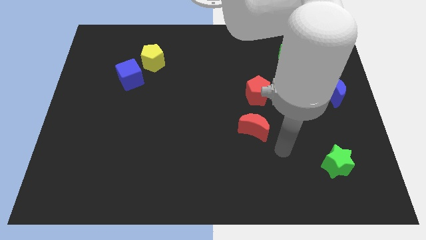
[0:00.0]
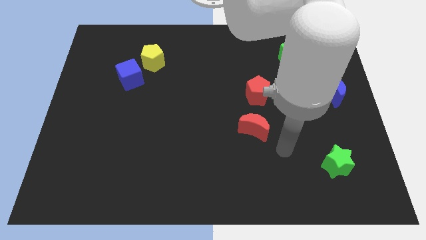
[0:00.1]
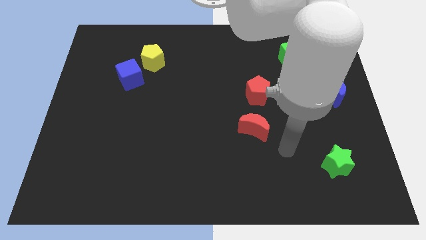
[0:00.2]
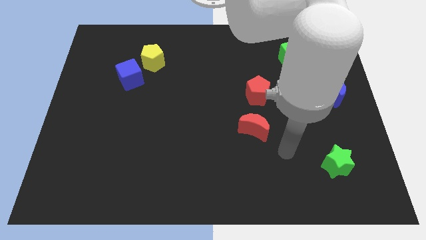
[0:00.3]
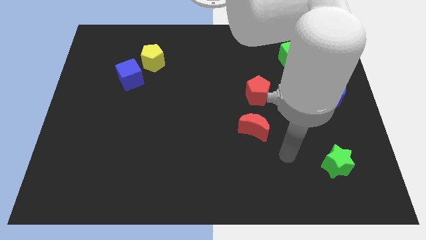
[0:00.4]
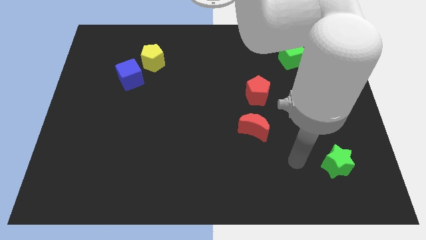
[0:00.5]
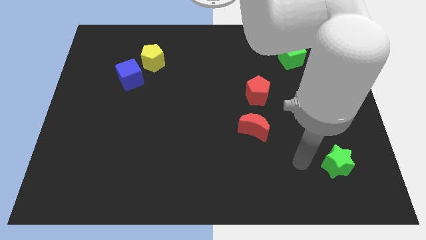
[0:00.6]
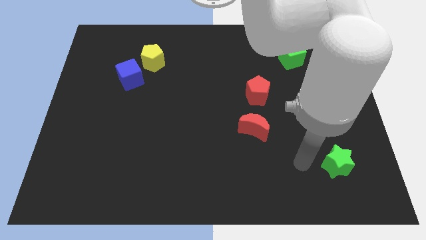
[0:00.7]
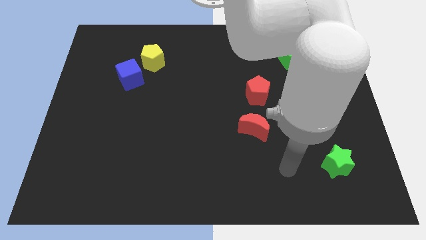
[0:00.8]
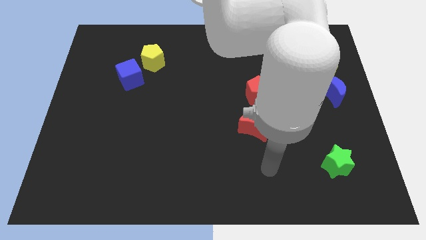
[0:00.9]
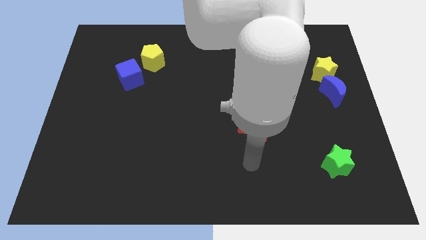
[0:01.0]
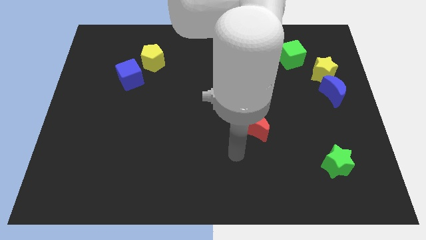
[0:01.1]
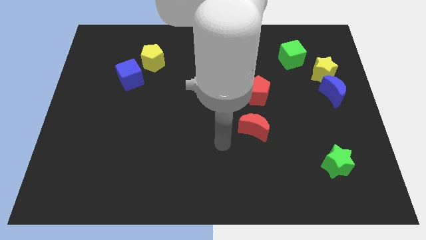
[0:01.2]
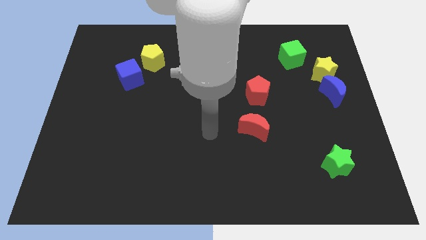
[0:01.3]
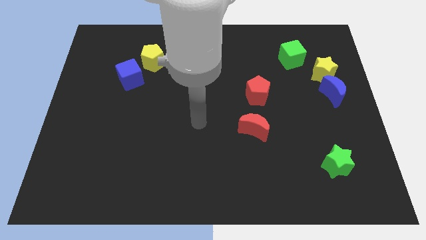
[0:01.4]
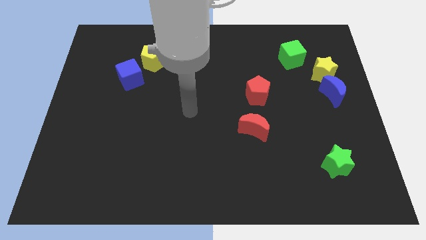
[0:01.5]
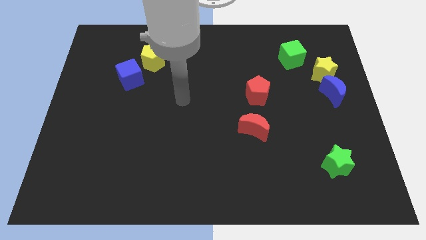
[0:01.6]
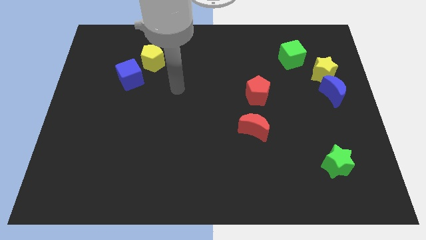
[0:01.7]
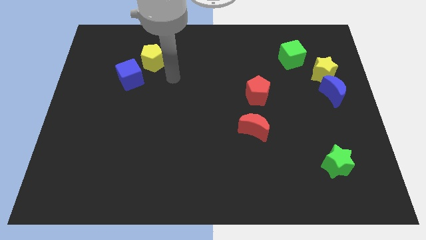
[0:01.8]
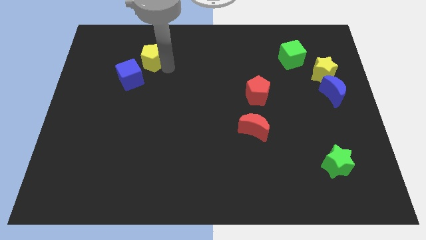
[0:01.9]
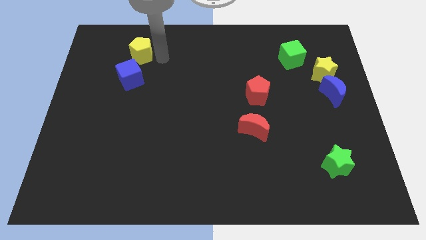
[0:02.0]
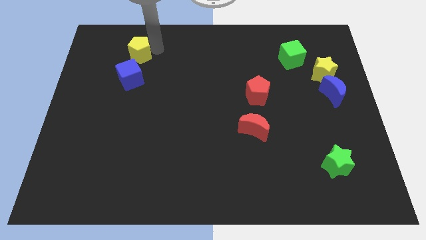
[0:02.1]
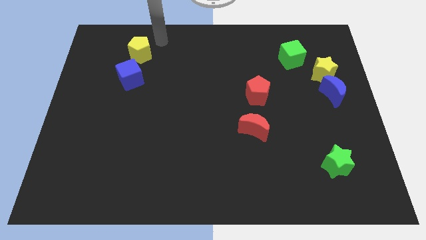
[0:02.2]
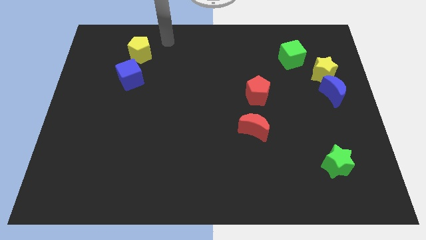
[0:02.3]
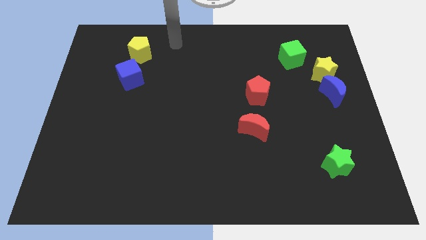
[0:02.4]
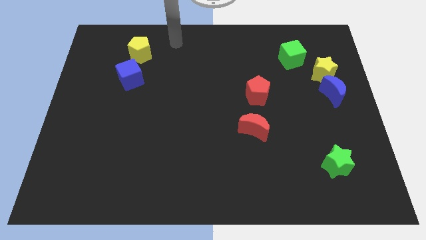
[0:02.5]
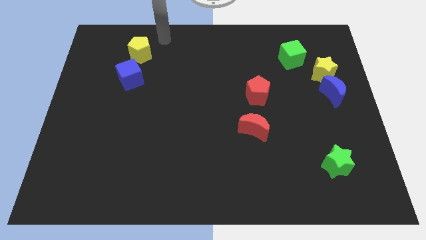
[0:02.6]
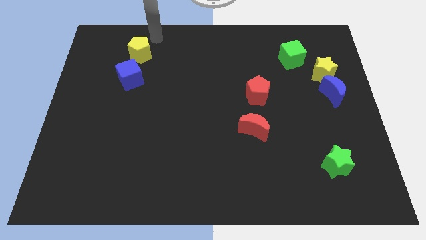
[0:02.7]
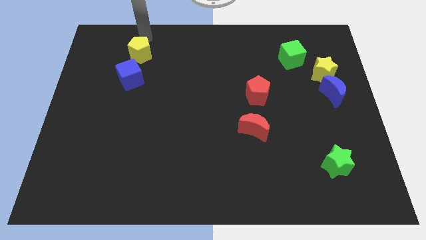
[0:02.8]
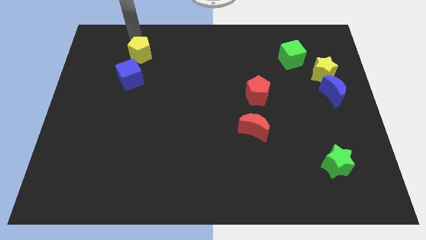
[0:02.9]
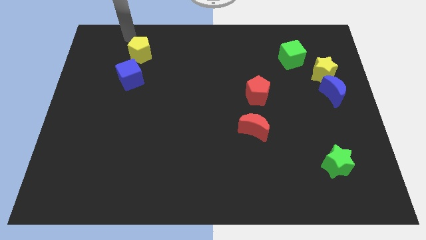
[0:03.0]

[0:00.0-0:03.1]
move arm near yellow pentagon

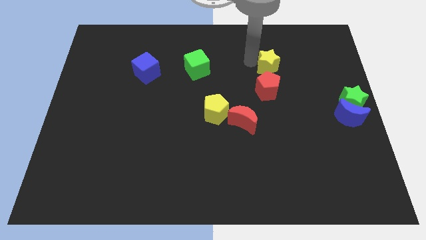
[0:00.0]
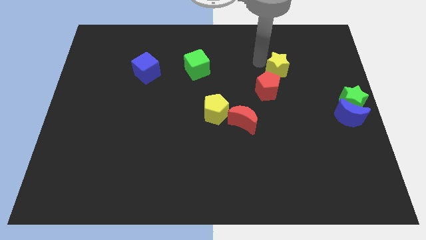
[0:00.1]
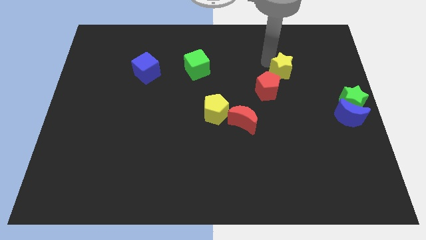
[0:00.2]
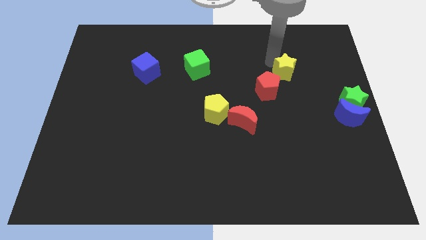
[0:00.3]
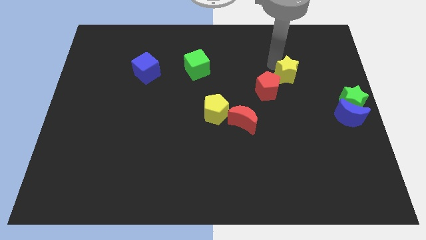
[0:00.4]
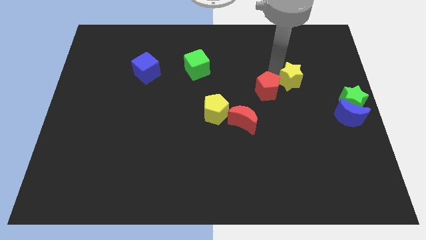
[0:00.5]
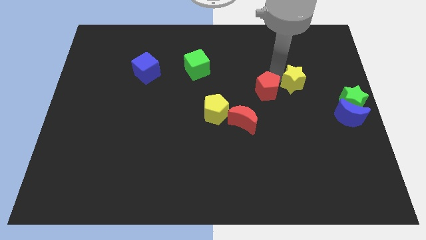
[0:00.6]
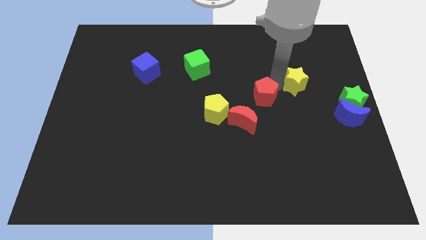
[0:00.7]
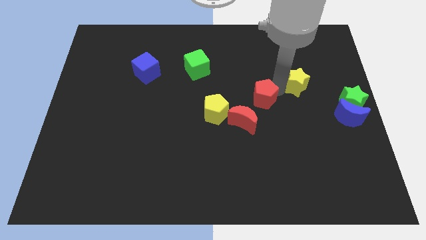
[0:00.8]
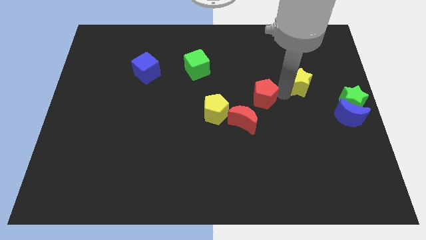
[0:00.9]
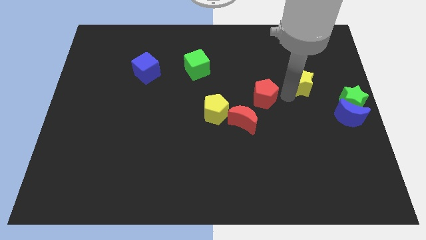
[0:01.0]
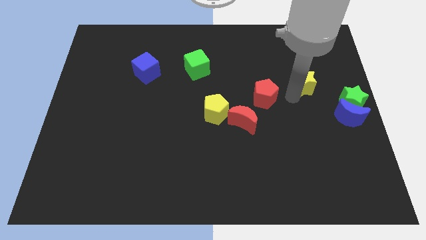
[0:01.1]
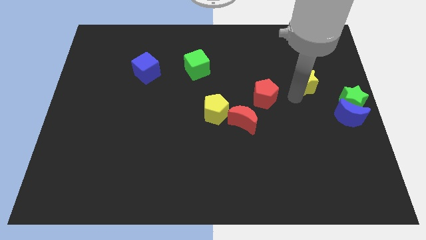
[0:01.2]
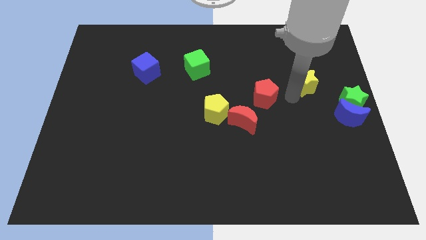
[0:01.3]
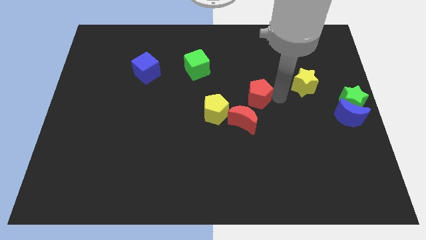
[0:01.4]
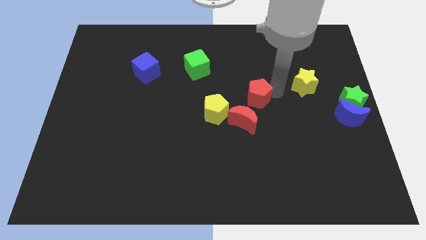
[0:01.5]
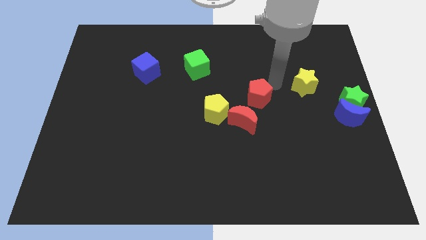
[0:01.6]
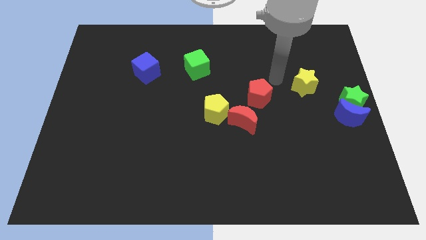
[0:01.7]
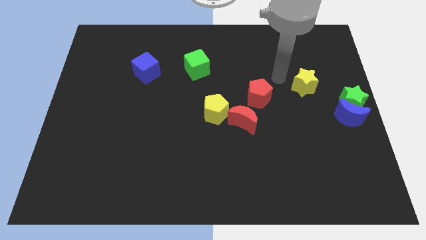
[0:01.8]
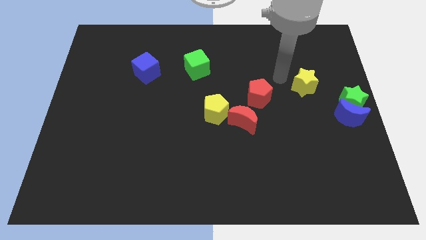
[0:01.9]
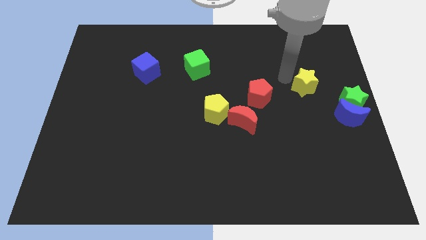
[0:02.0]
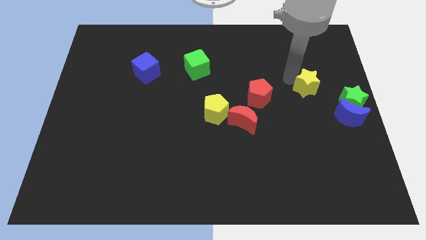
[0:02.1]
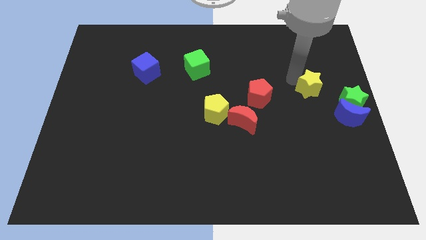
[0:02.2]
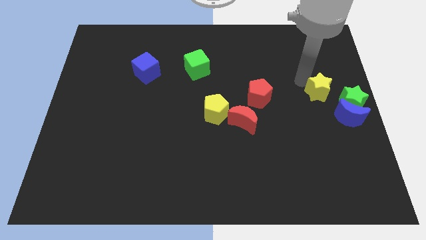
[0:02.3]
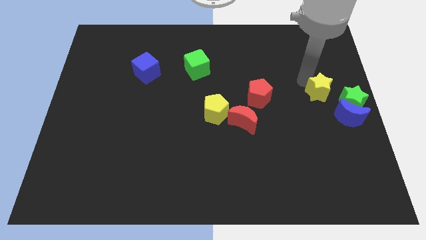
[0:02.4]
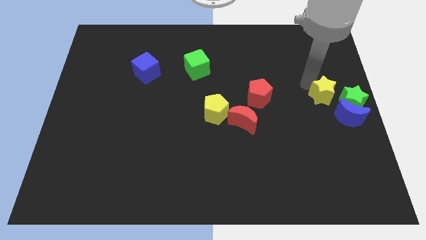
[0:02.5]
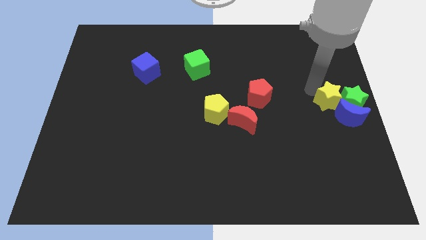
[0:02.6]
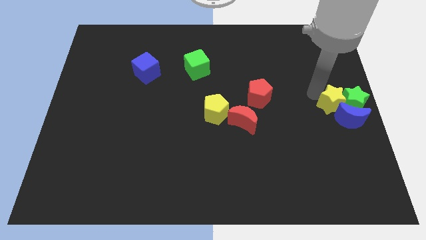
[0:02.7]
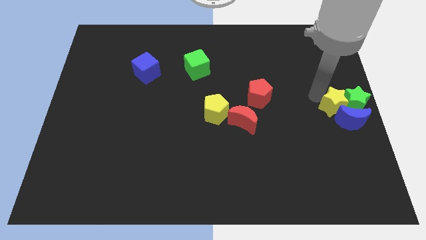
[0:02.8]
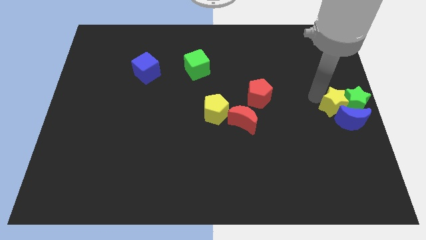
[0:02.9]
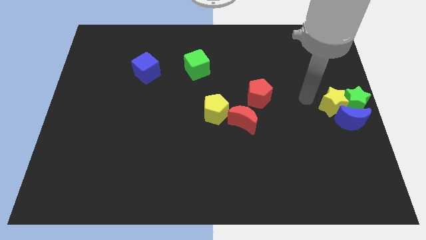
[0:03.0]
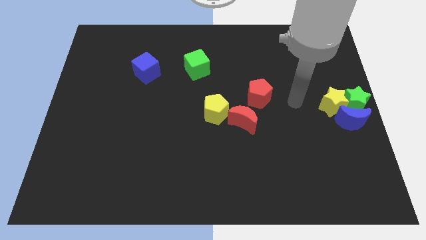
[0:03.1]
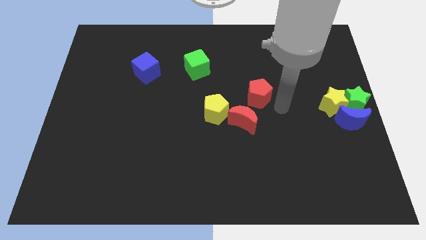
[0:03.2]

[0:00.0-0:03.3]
place the yellow star left to the green star

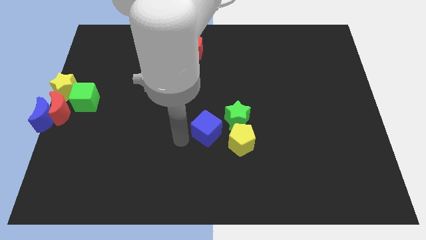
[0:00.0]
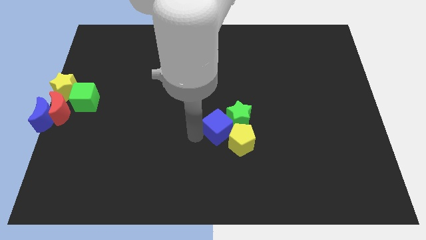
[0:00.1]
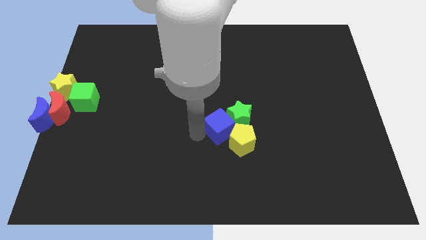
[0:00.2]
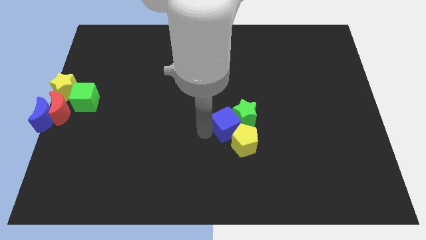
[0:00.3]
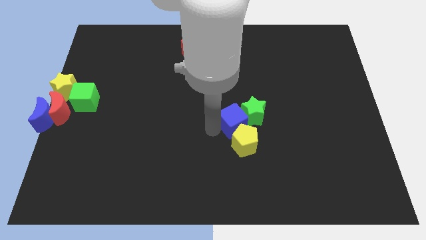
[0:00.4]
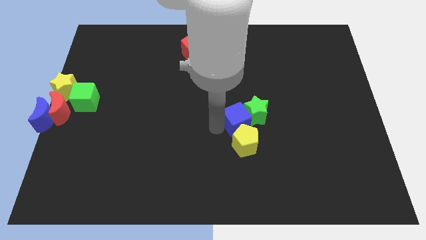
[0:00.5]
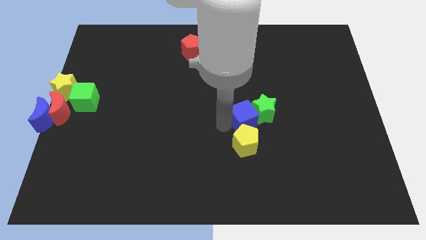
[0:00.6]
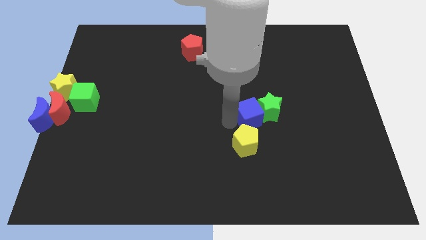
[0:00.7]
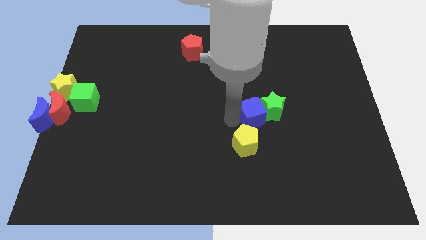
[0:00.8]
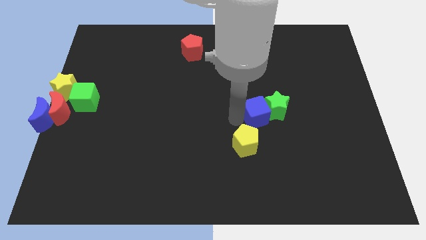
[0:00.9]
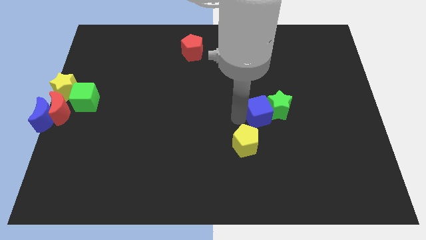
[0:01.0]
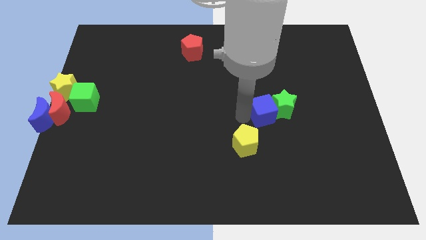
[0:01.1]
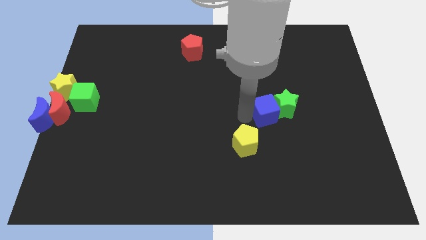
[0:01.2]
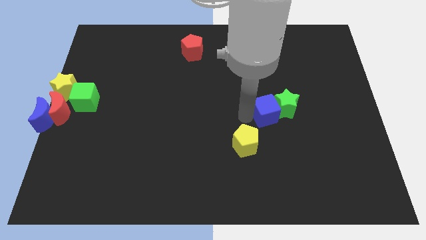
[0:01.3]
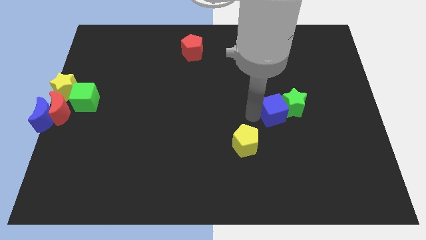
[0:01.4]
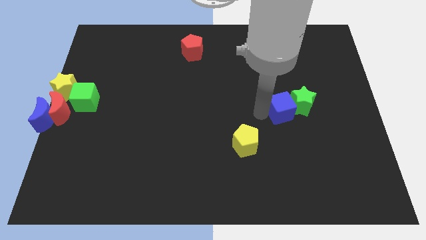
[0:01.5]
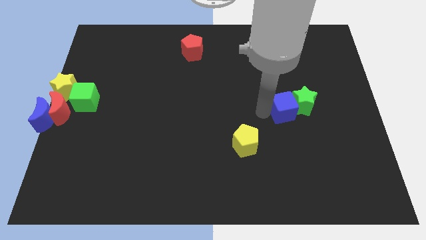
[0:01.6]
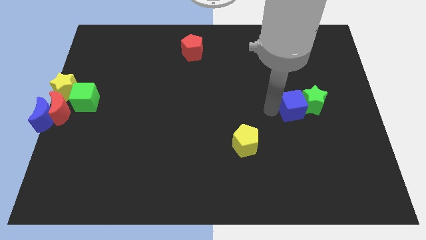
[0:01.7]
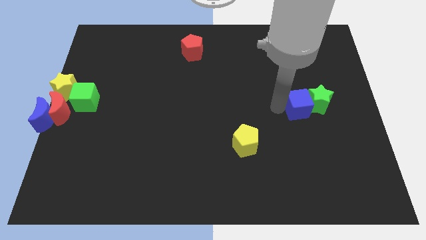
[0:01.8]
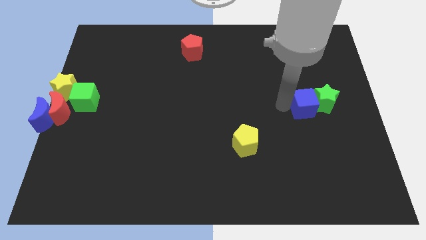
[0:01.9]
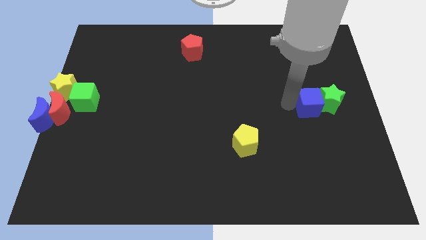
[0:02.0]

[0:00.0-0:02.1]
push the blue cube into the green star

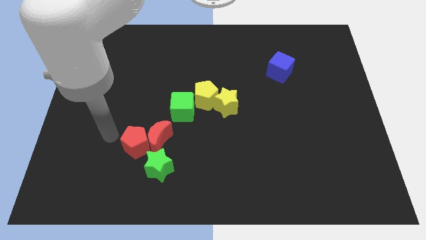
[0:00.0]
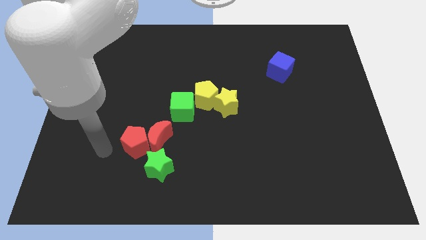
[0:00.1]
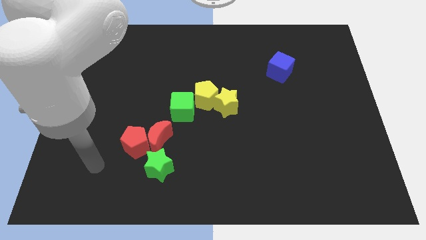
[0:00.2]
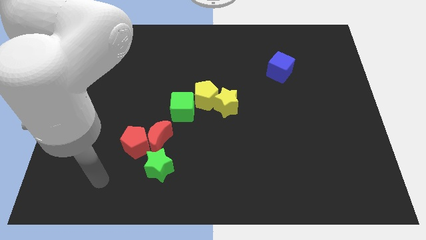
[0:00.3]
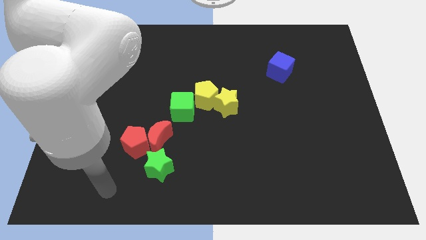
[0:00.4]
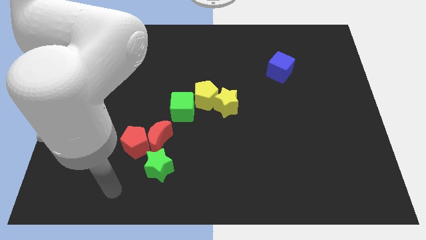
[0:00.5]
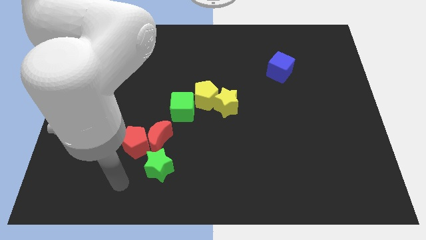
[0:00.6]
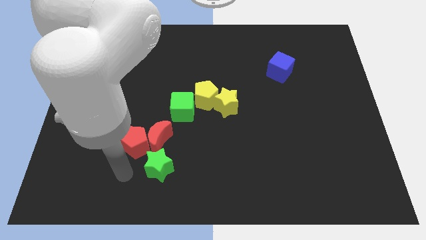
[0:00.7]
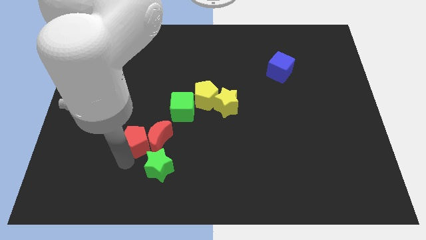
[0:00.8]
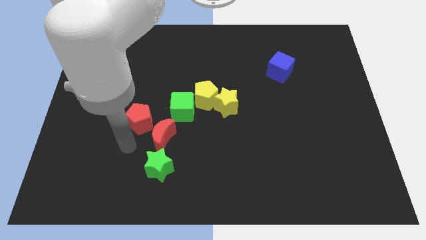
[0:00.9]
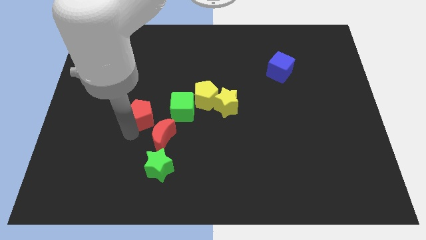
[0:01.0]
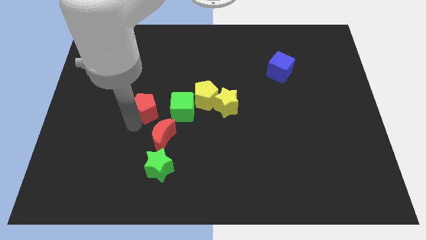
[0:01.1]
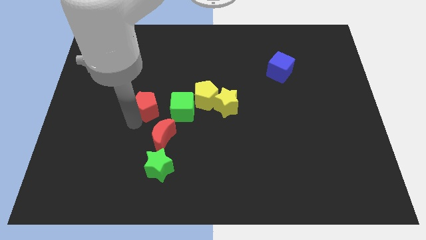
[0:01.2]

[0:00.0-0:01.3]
push the red pentagon to the left of the green cube
